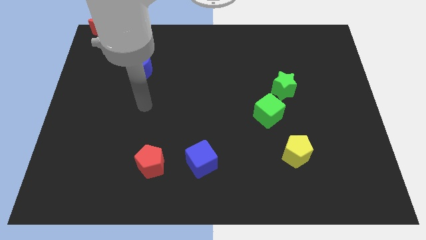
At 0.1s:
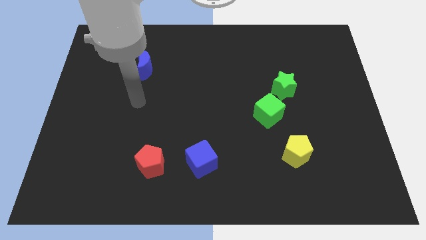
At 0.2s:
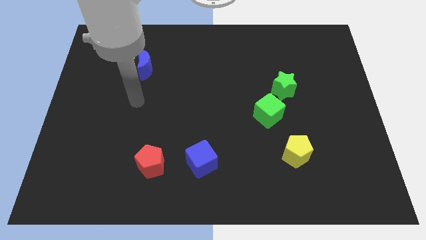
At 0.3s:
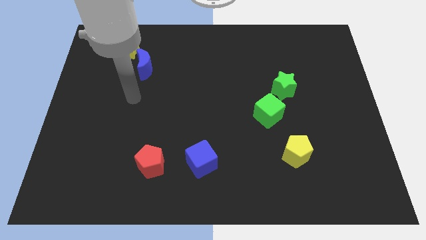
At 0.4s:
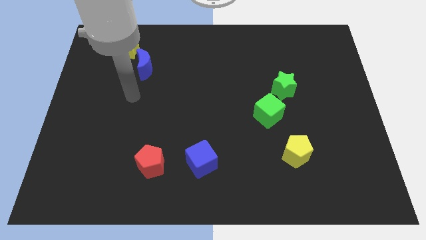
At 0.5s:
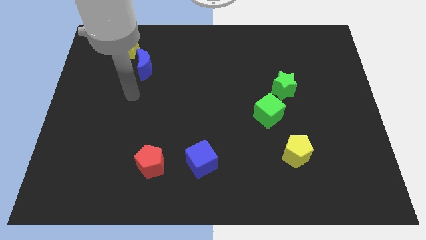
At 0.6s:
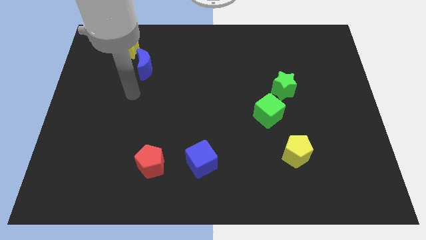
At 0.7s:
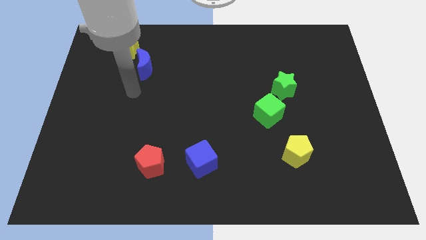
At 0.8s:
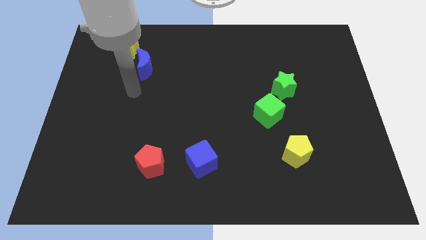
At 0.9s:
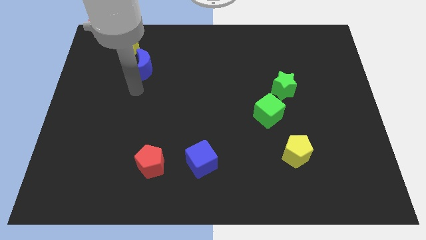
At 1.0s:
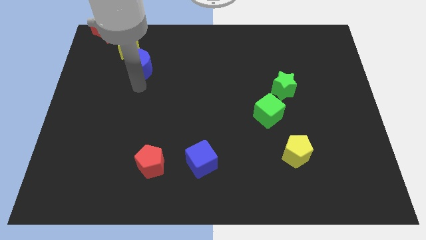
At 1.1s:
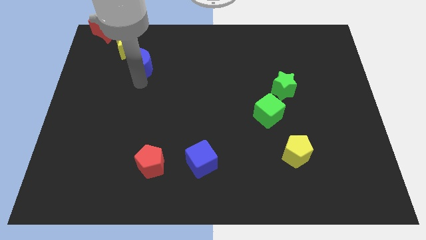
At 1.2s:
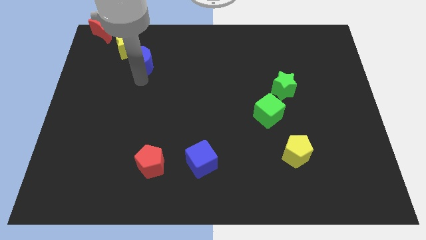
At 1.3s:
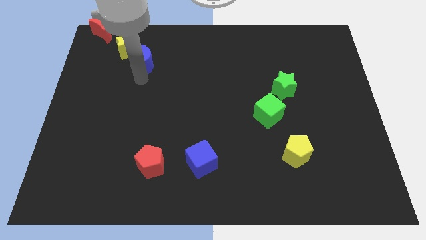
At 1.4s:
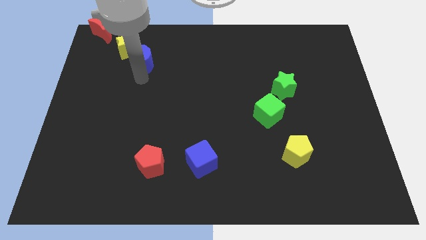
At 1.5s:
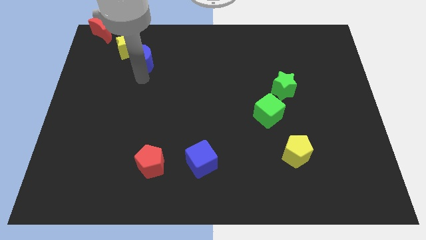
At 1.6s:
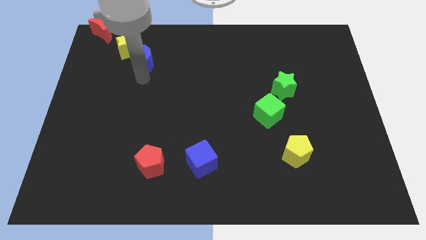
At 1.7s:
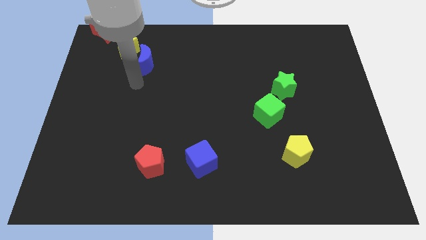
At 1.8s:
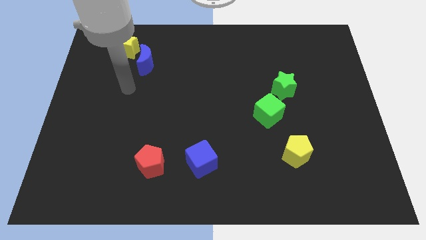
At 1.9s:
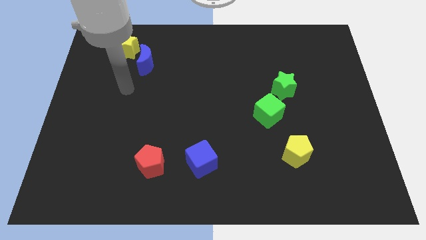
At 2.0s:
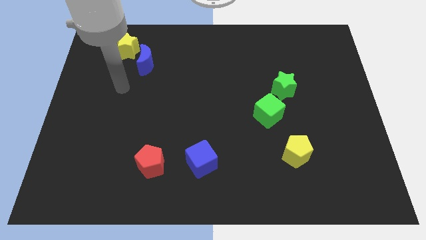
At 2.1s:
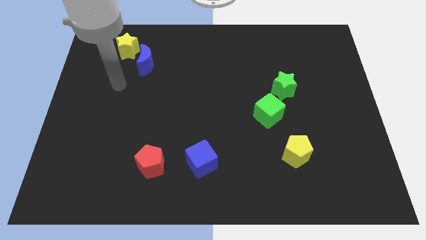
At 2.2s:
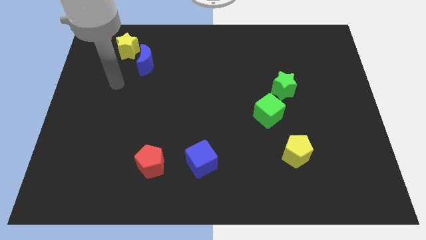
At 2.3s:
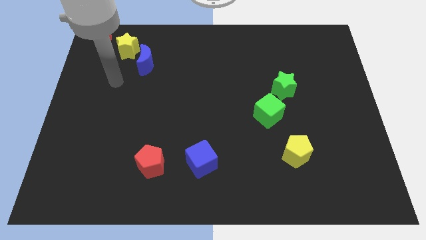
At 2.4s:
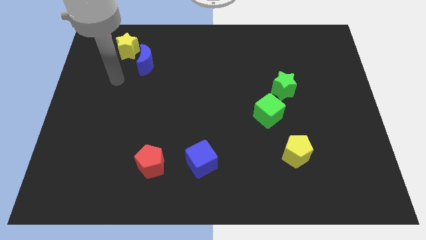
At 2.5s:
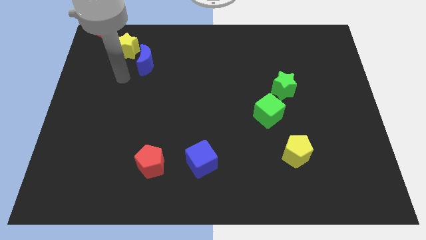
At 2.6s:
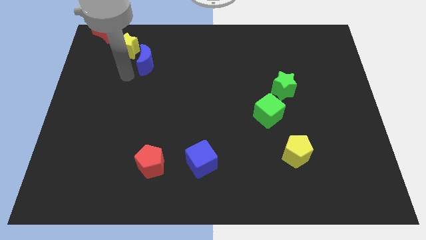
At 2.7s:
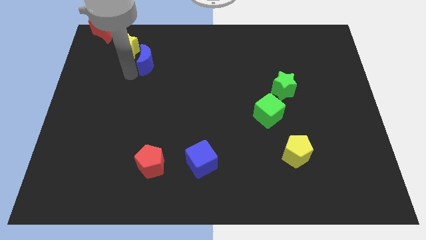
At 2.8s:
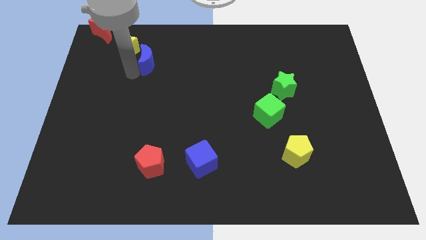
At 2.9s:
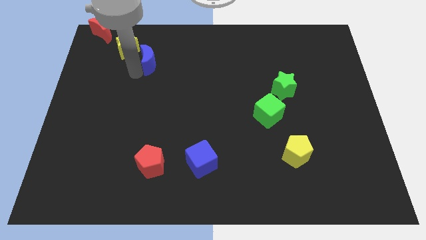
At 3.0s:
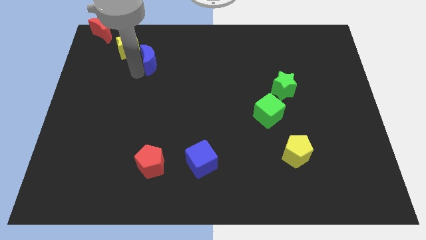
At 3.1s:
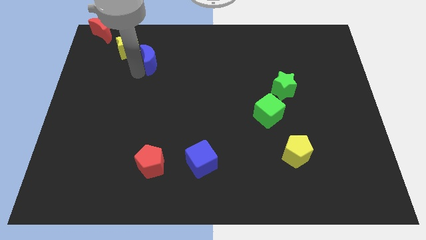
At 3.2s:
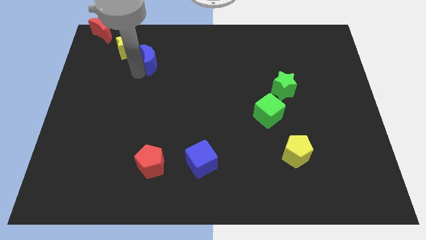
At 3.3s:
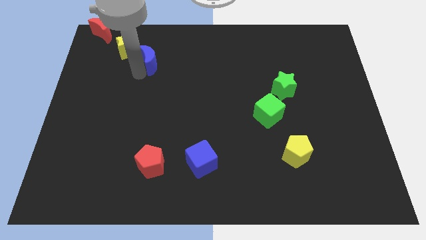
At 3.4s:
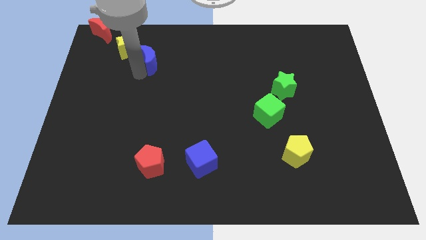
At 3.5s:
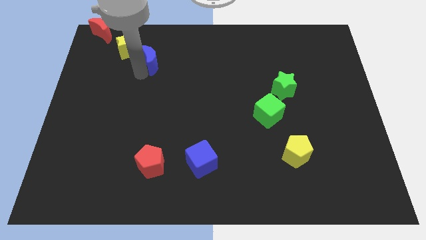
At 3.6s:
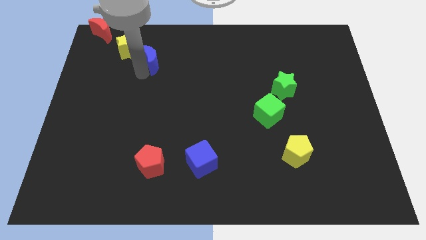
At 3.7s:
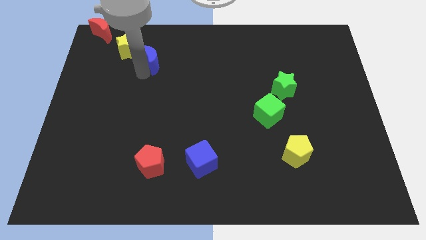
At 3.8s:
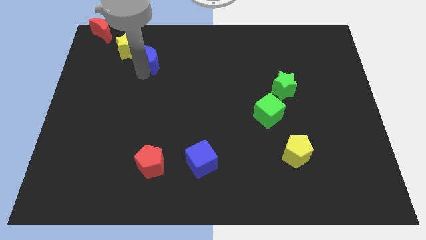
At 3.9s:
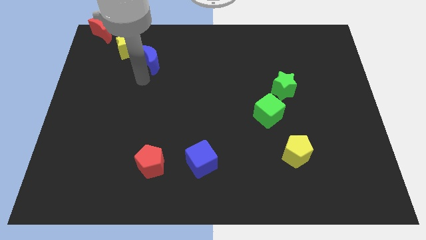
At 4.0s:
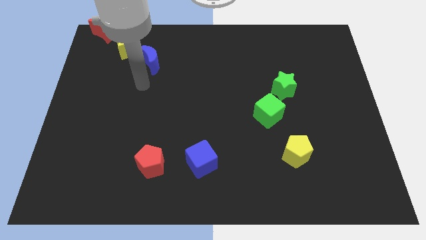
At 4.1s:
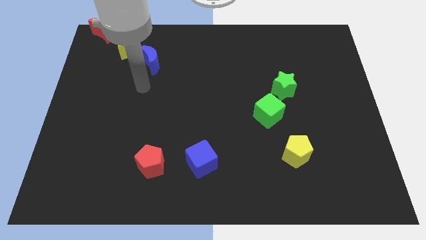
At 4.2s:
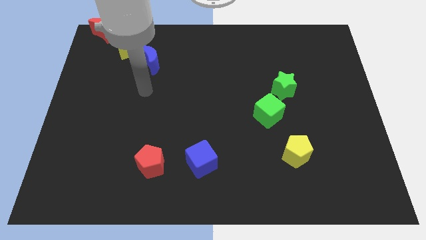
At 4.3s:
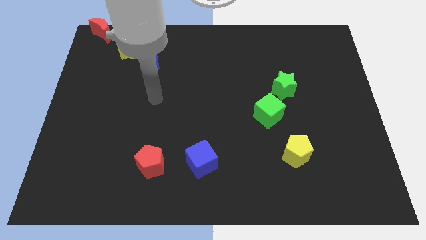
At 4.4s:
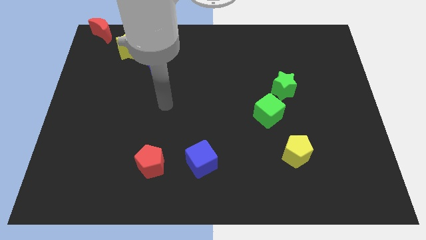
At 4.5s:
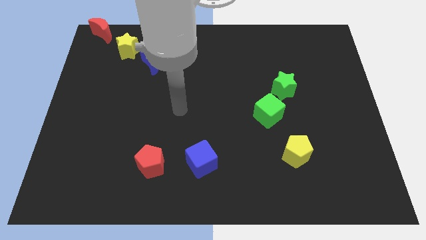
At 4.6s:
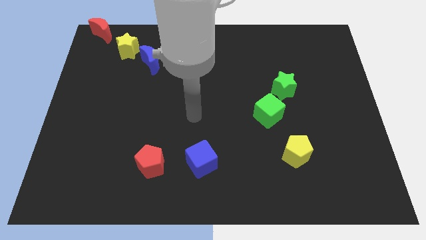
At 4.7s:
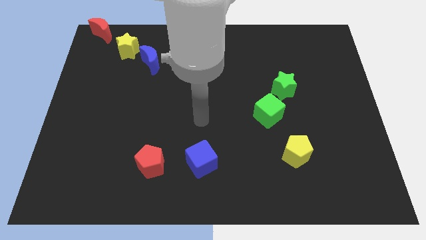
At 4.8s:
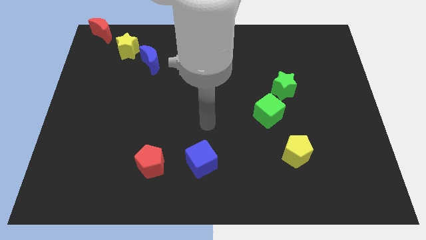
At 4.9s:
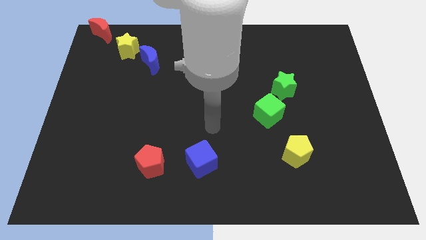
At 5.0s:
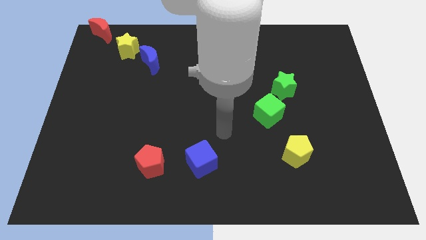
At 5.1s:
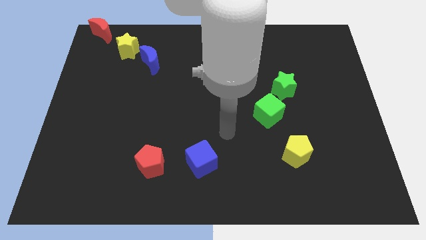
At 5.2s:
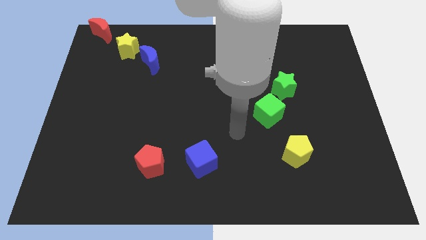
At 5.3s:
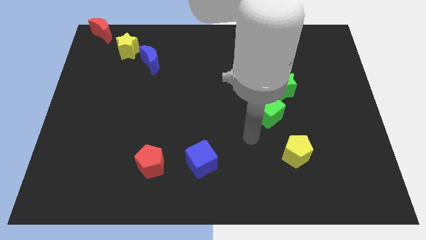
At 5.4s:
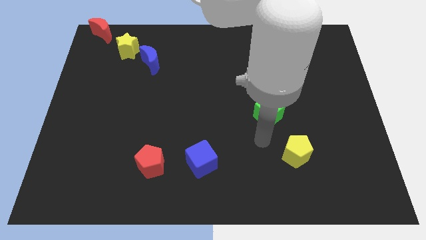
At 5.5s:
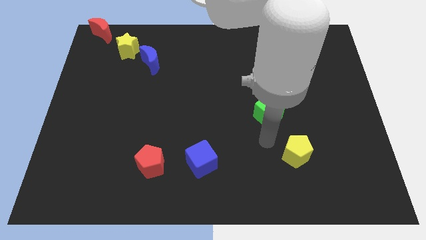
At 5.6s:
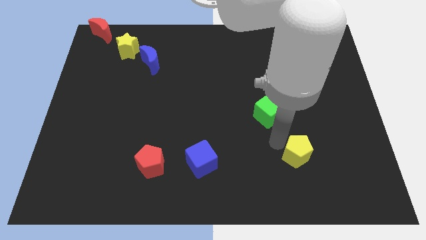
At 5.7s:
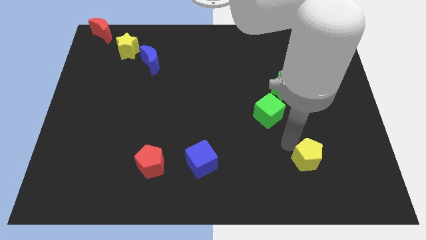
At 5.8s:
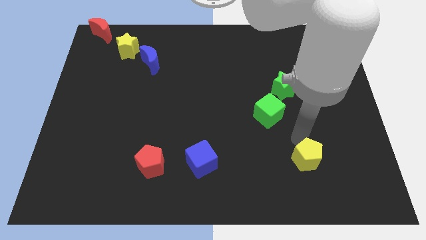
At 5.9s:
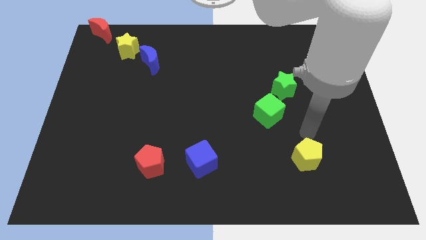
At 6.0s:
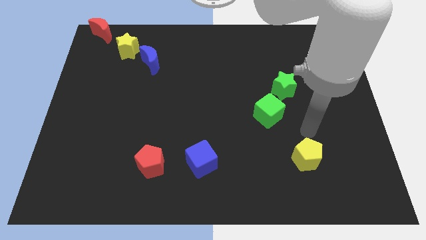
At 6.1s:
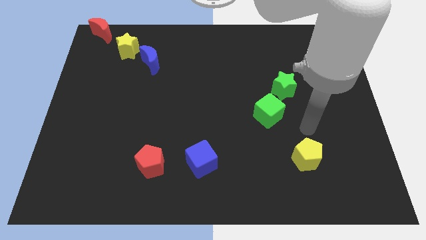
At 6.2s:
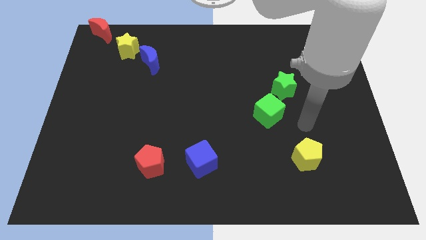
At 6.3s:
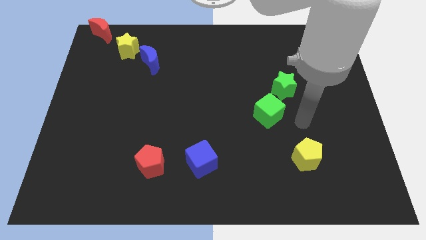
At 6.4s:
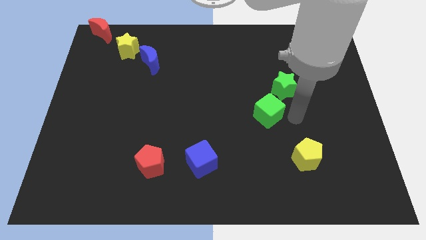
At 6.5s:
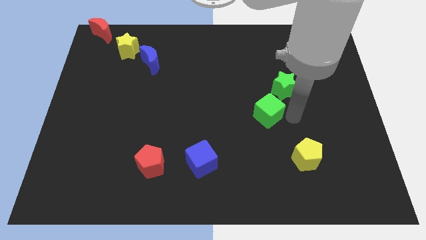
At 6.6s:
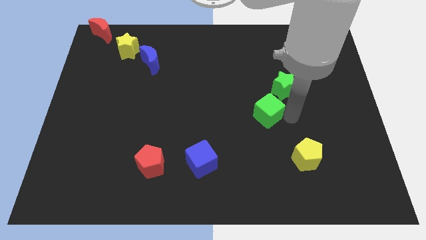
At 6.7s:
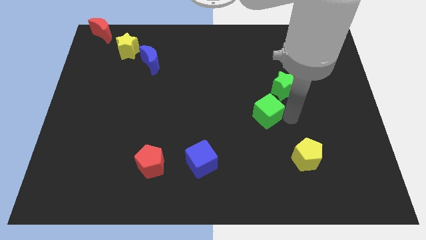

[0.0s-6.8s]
move arm to the green cube

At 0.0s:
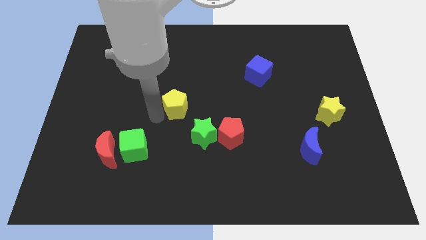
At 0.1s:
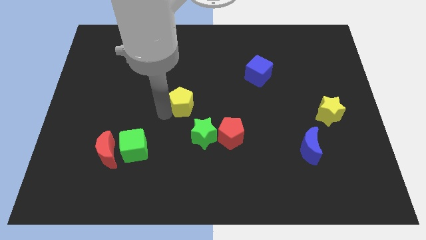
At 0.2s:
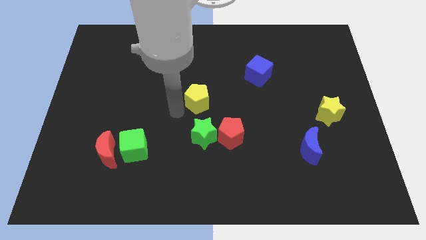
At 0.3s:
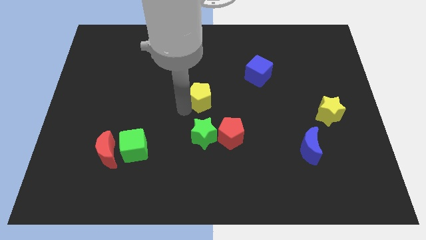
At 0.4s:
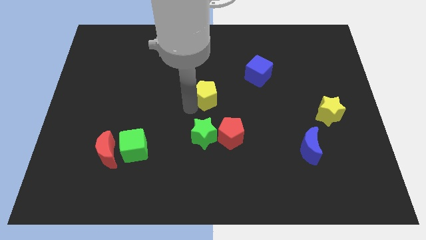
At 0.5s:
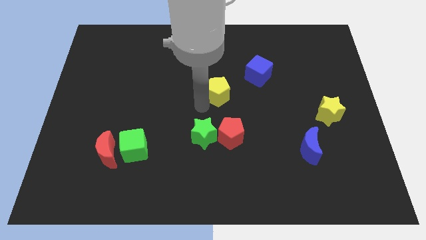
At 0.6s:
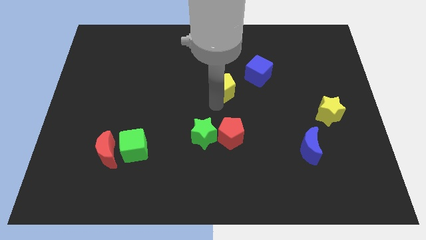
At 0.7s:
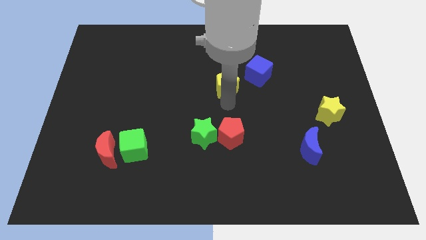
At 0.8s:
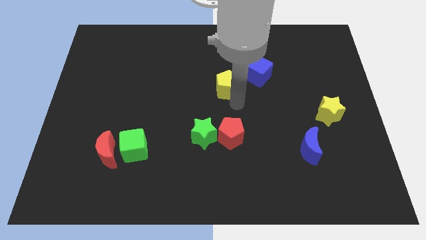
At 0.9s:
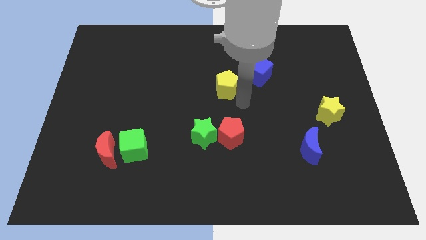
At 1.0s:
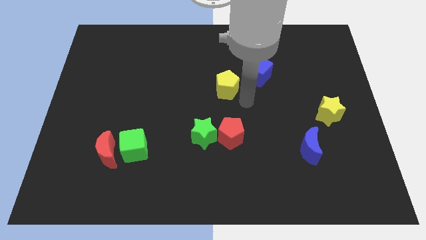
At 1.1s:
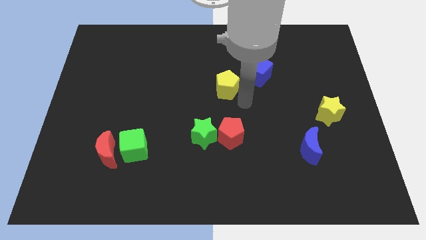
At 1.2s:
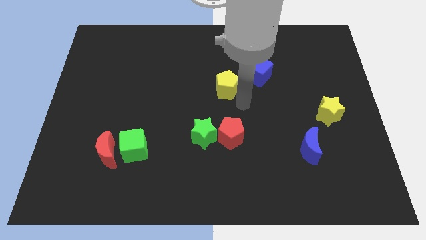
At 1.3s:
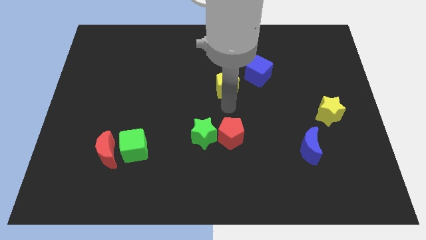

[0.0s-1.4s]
push the yellow pentagon to the left of the blue cube

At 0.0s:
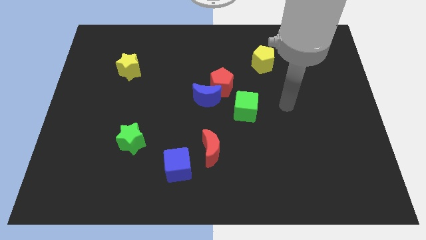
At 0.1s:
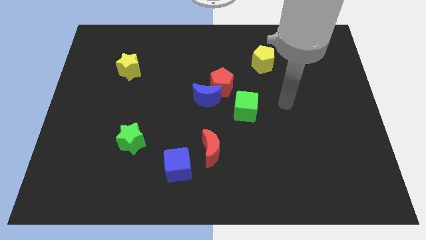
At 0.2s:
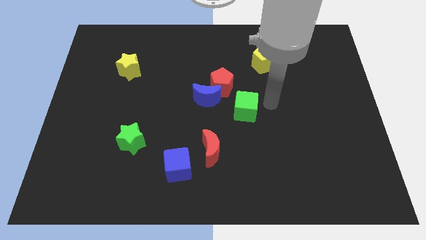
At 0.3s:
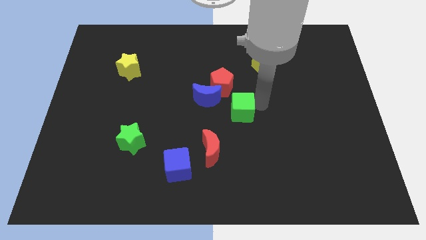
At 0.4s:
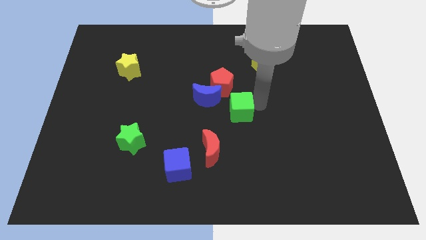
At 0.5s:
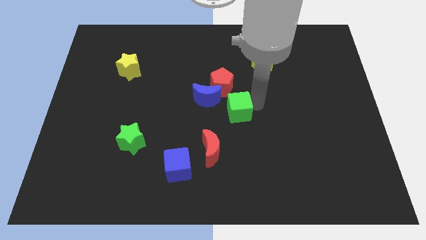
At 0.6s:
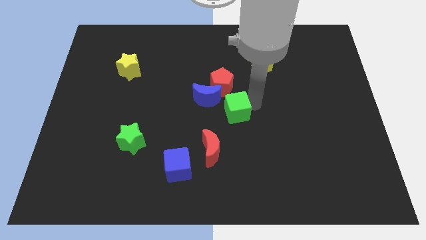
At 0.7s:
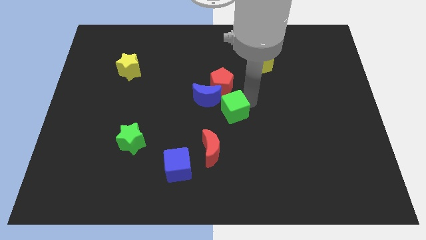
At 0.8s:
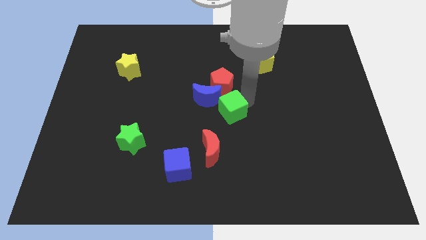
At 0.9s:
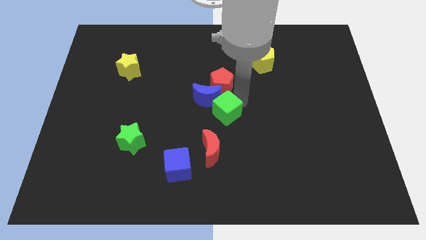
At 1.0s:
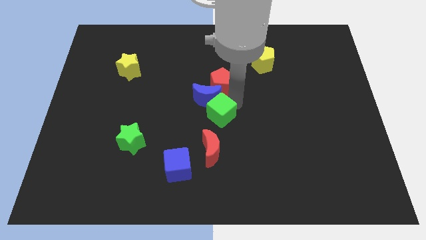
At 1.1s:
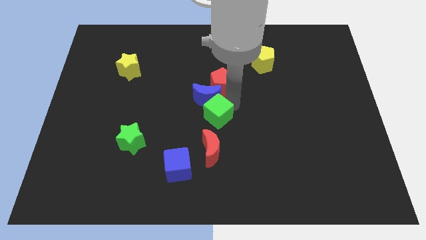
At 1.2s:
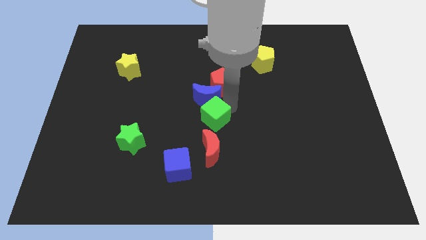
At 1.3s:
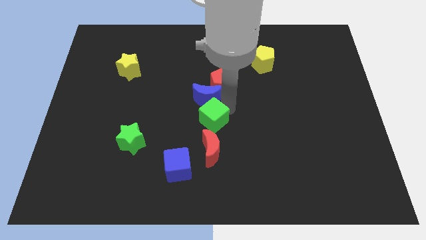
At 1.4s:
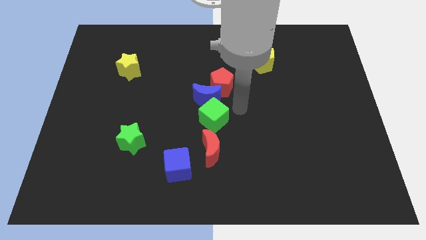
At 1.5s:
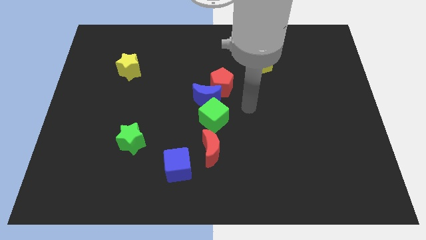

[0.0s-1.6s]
put the green cube in between the blue moon and red moon
